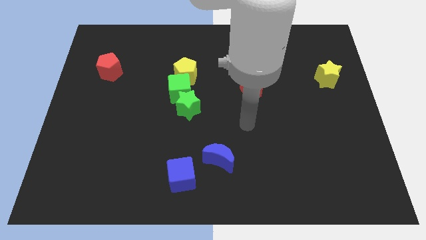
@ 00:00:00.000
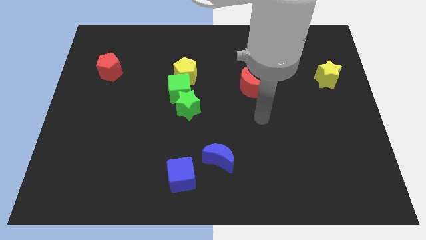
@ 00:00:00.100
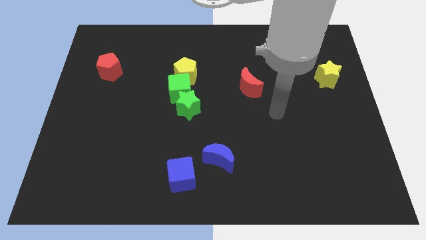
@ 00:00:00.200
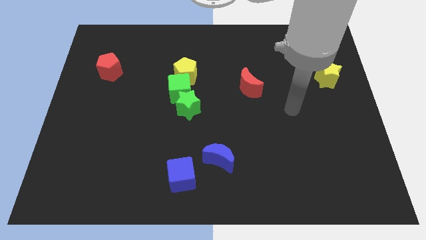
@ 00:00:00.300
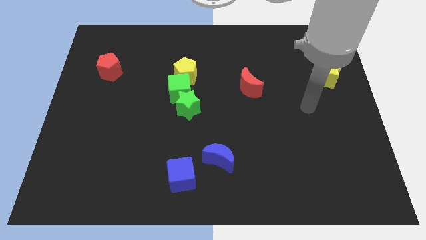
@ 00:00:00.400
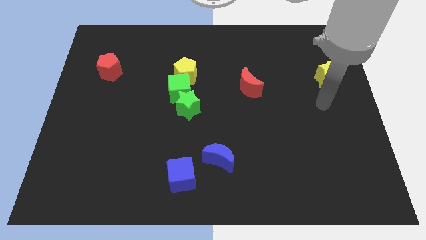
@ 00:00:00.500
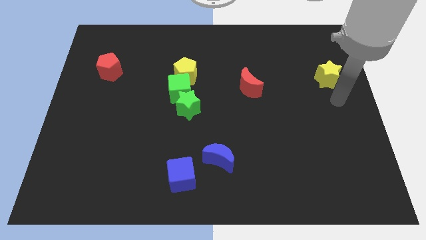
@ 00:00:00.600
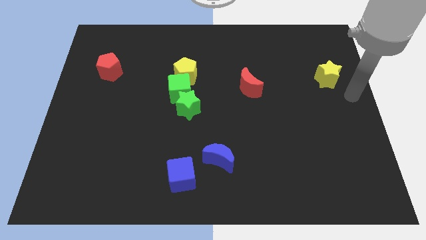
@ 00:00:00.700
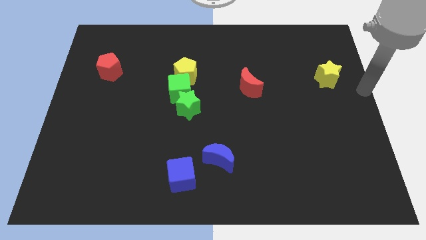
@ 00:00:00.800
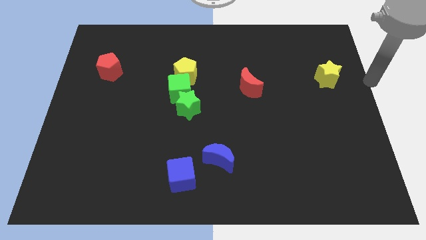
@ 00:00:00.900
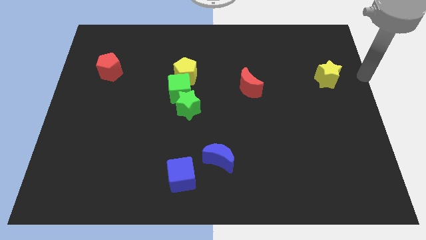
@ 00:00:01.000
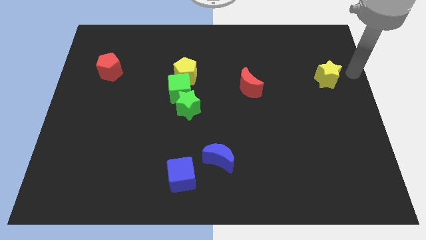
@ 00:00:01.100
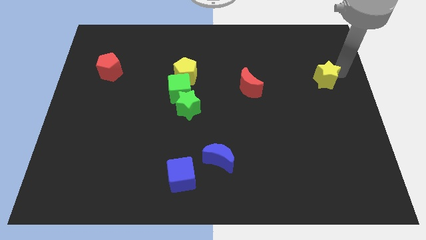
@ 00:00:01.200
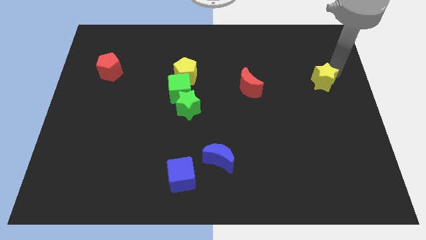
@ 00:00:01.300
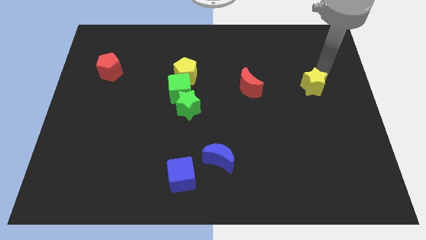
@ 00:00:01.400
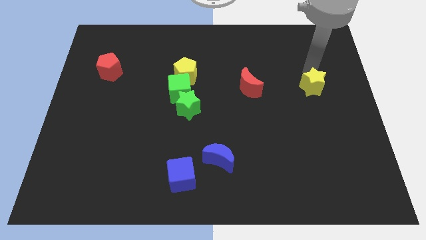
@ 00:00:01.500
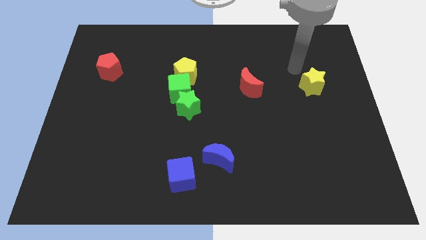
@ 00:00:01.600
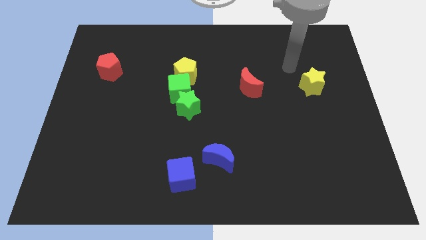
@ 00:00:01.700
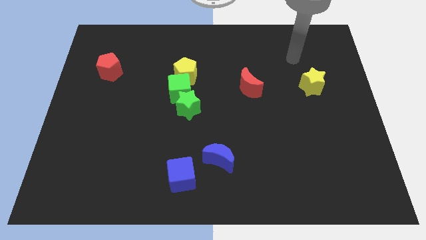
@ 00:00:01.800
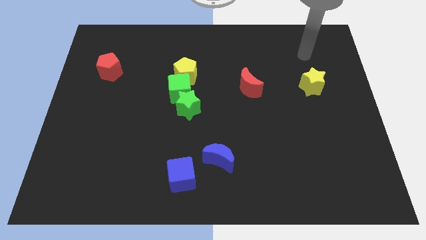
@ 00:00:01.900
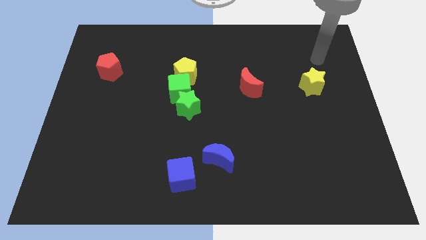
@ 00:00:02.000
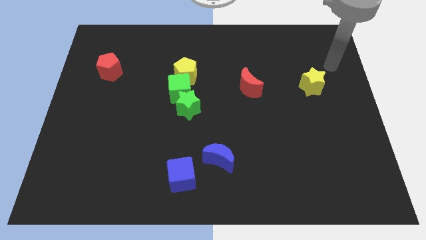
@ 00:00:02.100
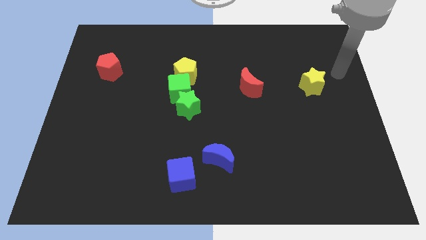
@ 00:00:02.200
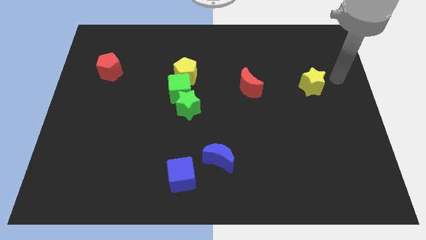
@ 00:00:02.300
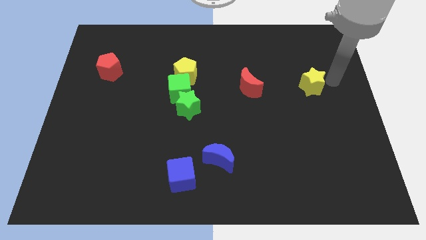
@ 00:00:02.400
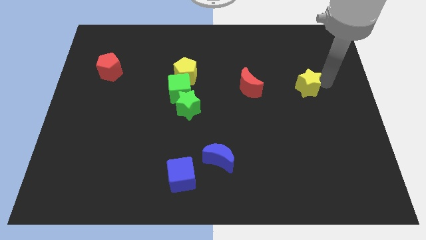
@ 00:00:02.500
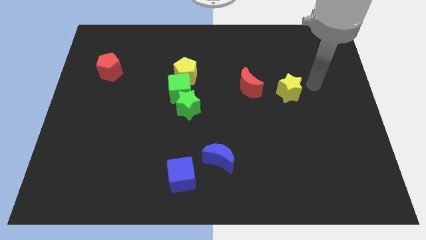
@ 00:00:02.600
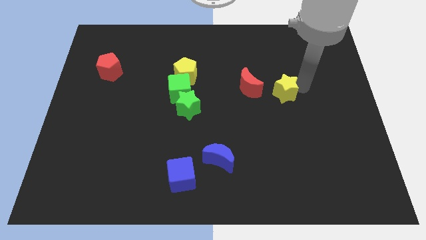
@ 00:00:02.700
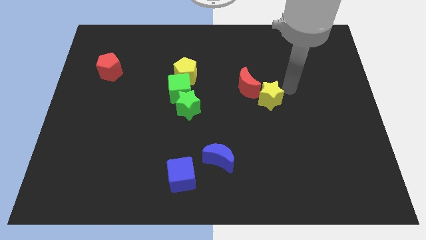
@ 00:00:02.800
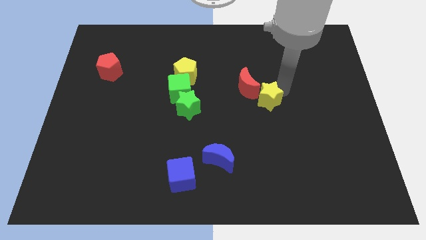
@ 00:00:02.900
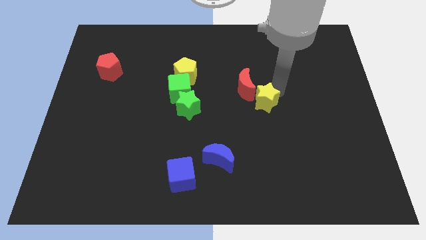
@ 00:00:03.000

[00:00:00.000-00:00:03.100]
add yellow star into red moon

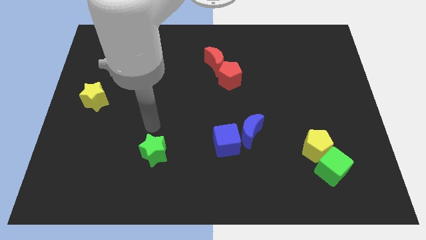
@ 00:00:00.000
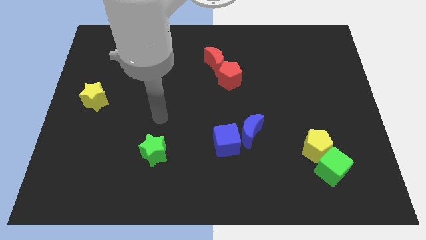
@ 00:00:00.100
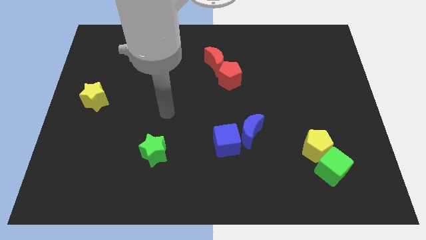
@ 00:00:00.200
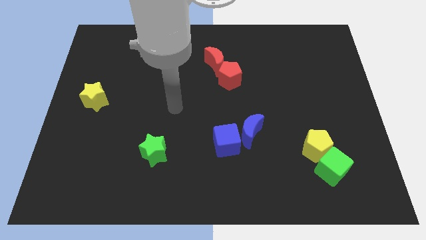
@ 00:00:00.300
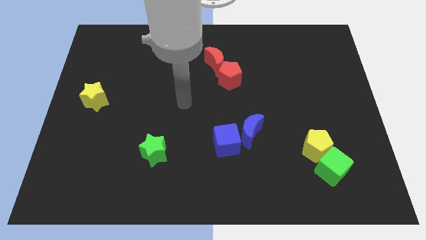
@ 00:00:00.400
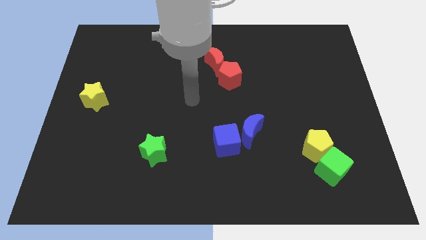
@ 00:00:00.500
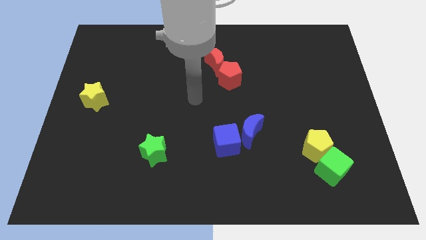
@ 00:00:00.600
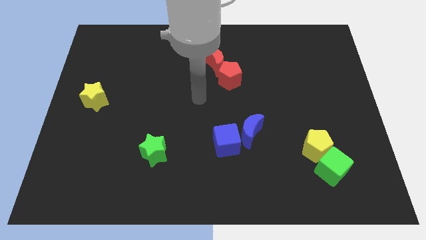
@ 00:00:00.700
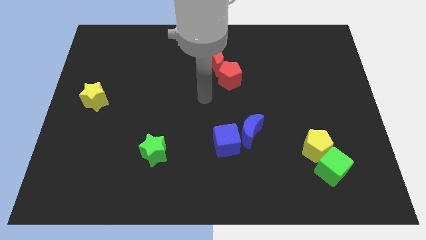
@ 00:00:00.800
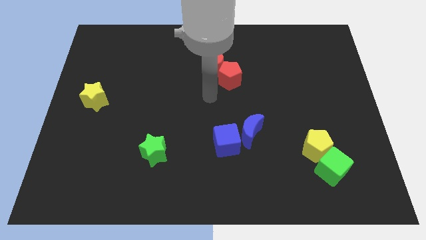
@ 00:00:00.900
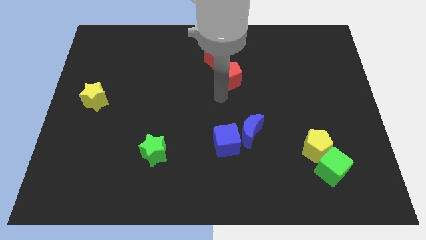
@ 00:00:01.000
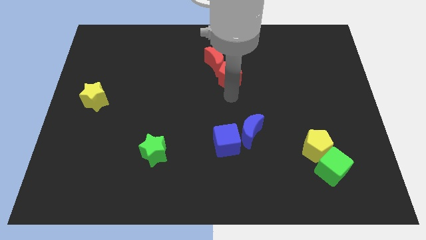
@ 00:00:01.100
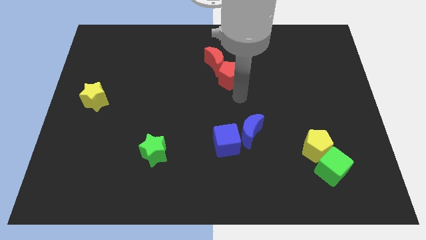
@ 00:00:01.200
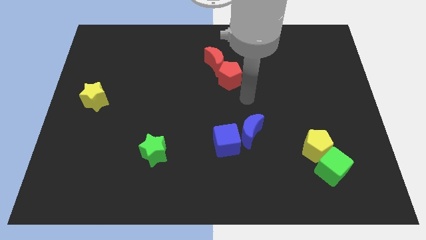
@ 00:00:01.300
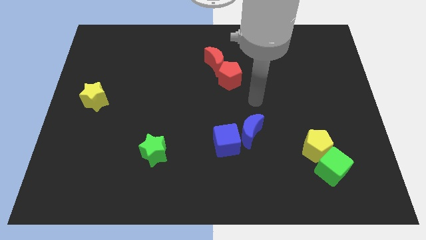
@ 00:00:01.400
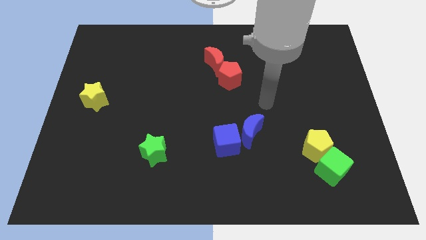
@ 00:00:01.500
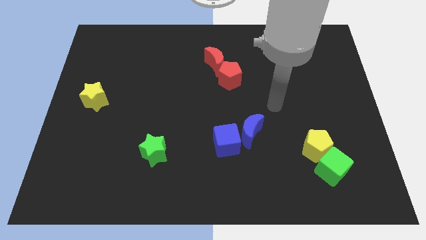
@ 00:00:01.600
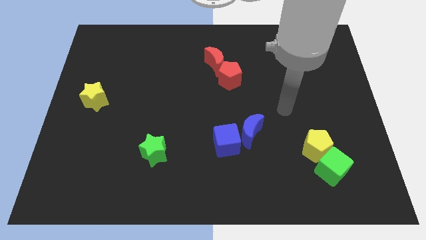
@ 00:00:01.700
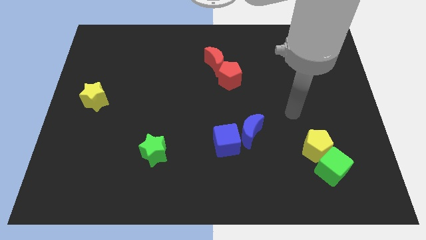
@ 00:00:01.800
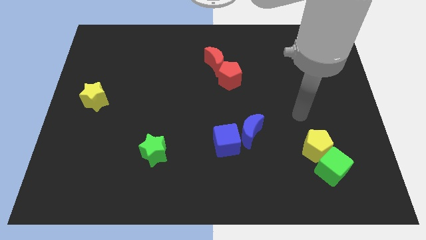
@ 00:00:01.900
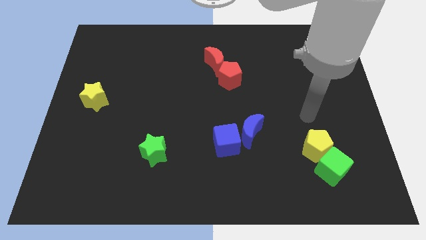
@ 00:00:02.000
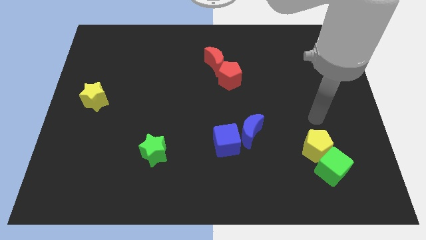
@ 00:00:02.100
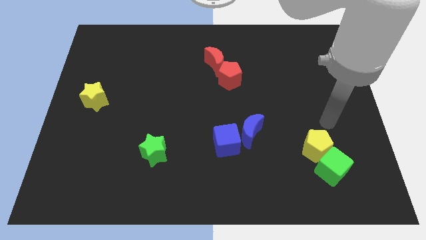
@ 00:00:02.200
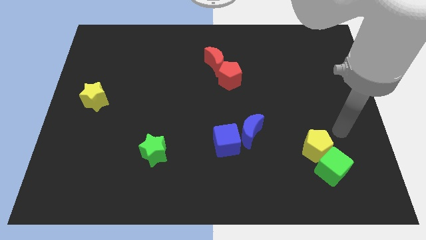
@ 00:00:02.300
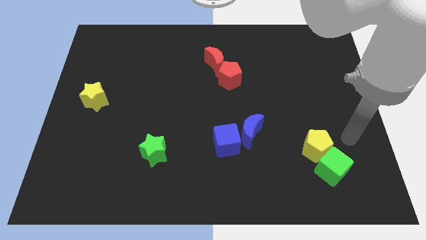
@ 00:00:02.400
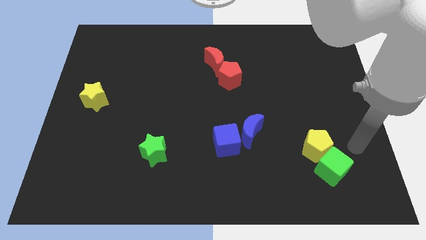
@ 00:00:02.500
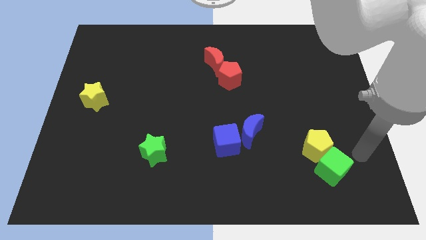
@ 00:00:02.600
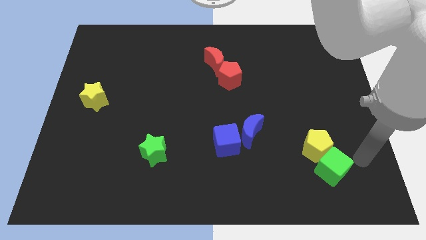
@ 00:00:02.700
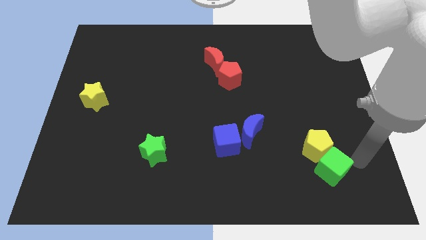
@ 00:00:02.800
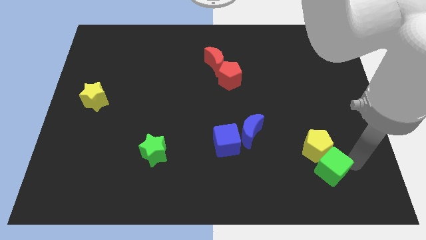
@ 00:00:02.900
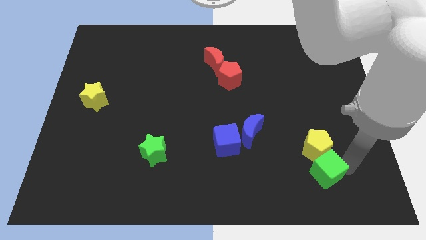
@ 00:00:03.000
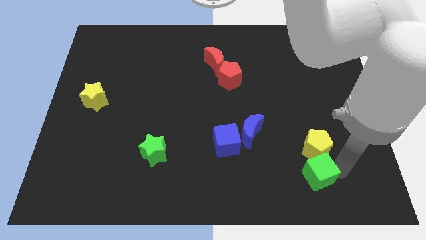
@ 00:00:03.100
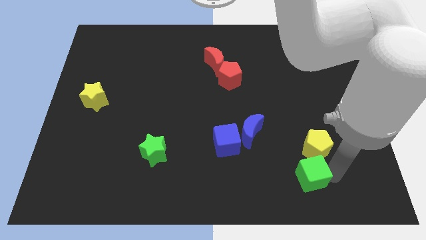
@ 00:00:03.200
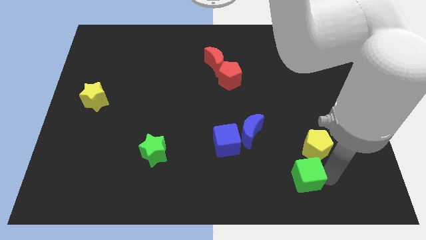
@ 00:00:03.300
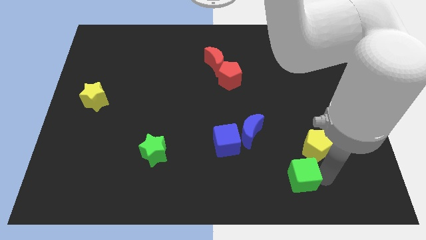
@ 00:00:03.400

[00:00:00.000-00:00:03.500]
move the green cube to the bottom of the yellow pentagon

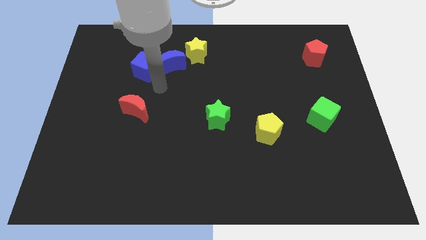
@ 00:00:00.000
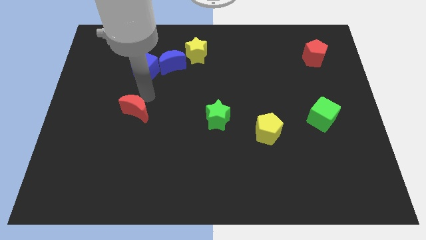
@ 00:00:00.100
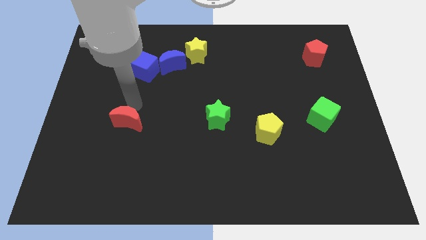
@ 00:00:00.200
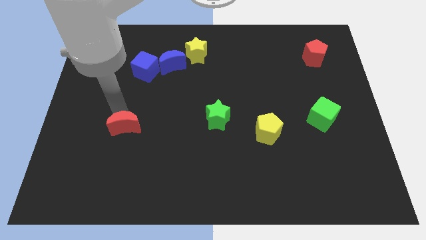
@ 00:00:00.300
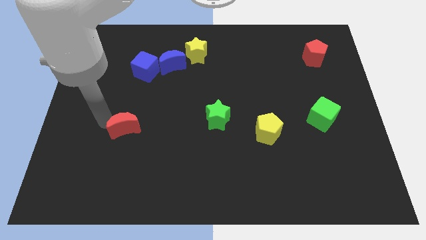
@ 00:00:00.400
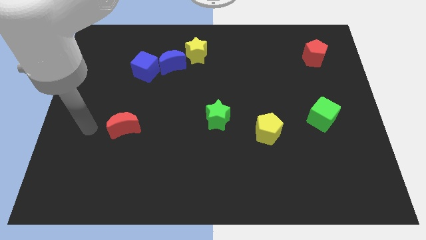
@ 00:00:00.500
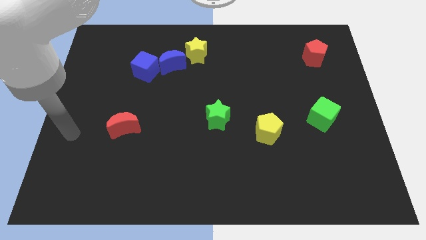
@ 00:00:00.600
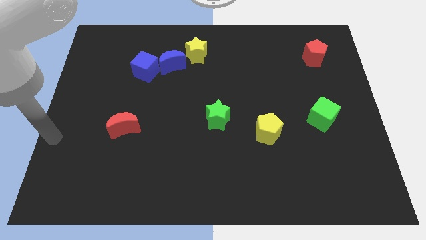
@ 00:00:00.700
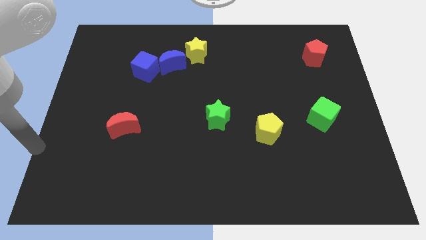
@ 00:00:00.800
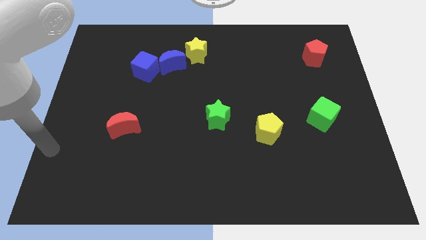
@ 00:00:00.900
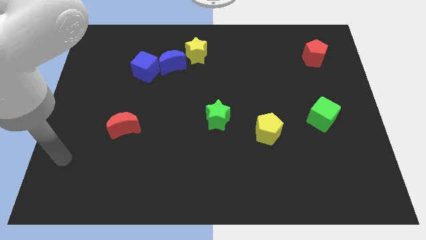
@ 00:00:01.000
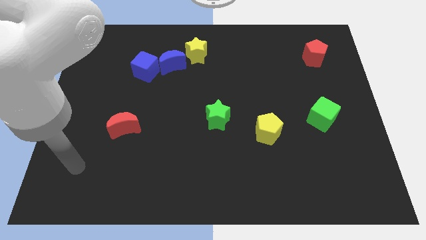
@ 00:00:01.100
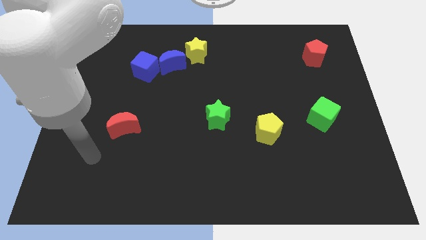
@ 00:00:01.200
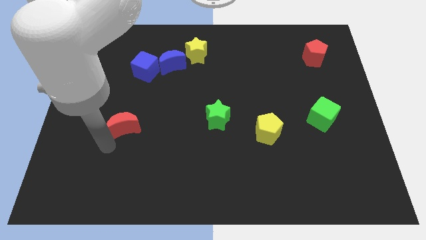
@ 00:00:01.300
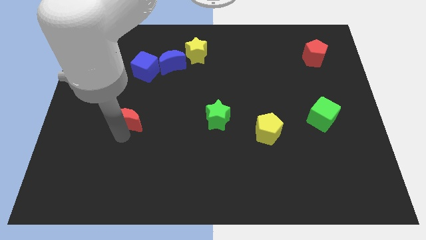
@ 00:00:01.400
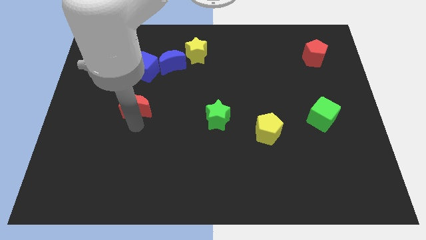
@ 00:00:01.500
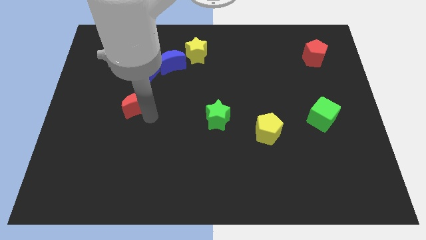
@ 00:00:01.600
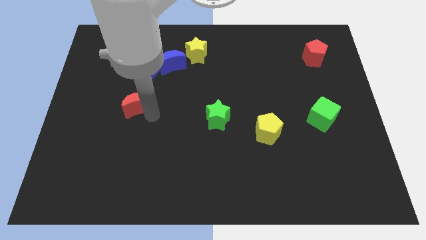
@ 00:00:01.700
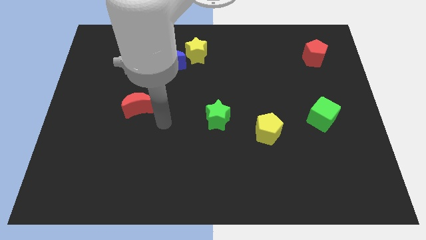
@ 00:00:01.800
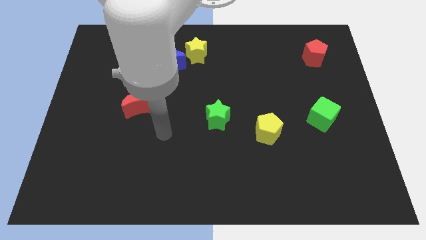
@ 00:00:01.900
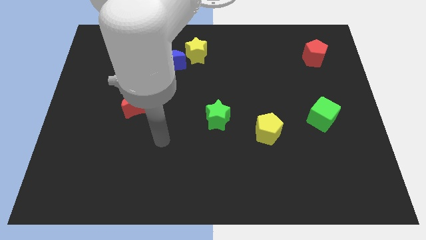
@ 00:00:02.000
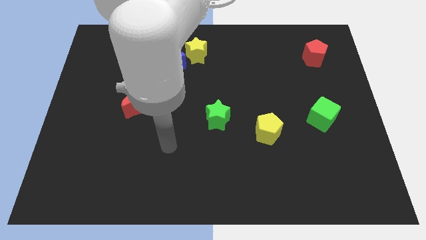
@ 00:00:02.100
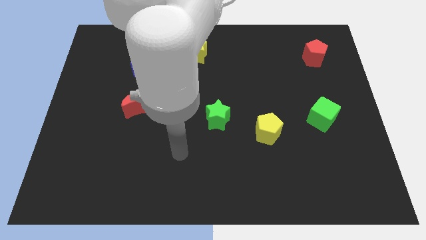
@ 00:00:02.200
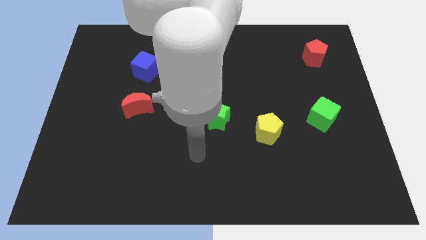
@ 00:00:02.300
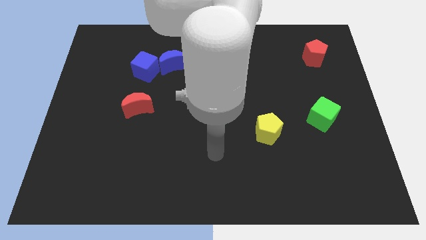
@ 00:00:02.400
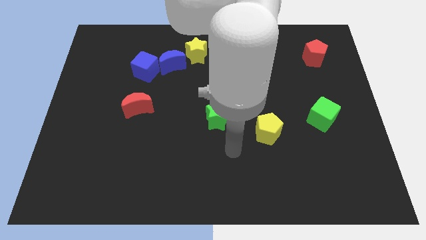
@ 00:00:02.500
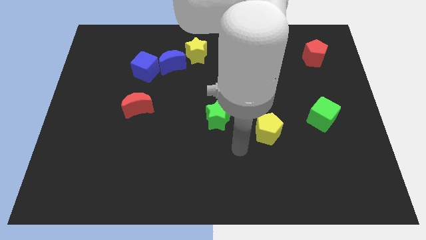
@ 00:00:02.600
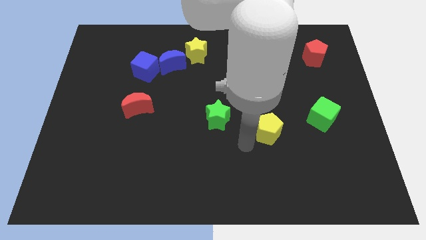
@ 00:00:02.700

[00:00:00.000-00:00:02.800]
place red crescent to the bottom of blue cube
